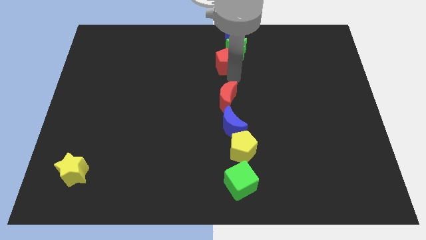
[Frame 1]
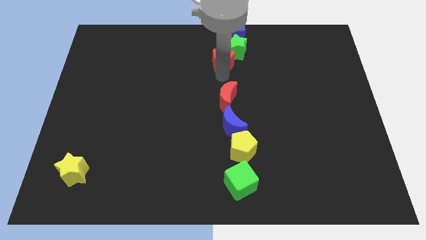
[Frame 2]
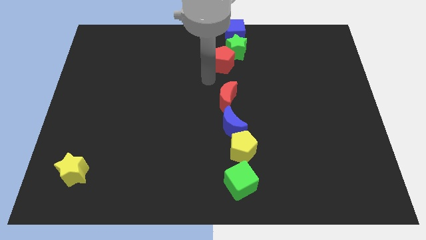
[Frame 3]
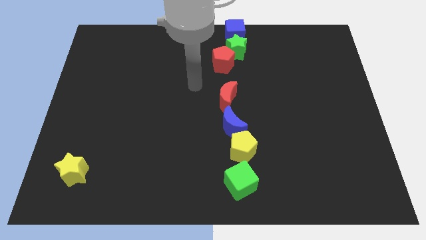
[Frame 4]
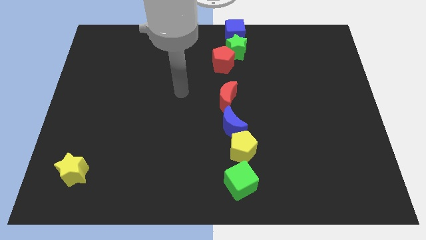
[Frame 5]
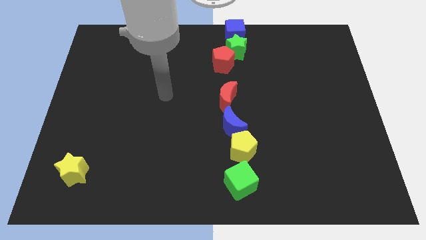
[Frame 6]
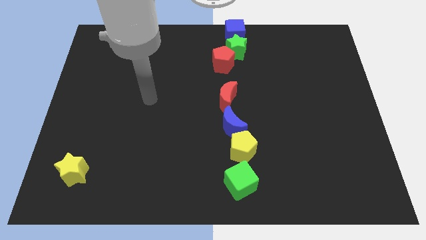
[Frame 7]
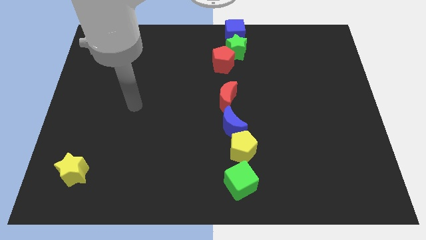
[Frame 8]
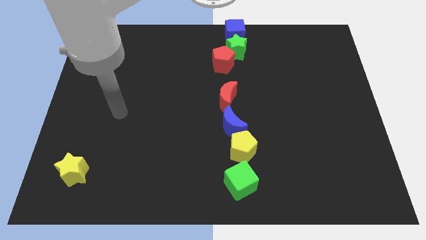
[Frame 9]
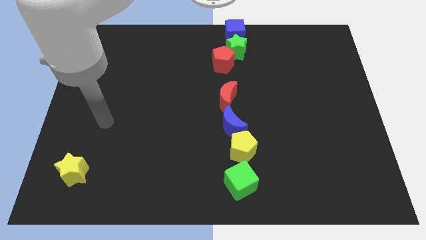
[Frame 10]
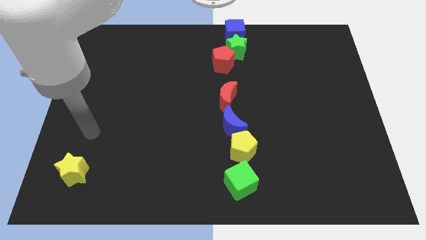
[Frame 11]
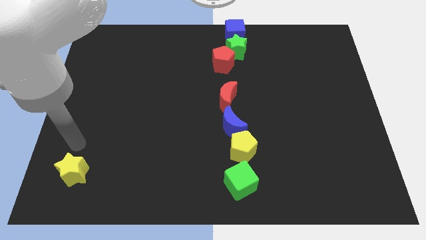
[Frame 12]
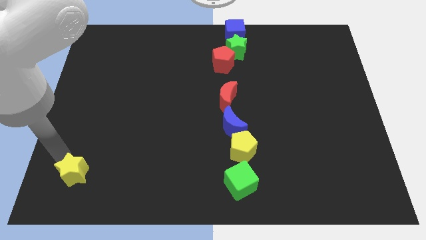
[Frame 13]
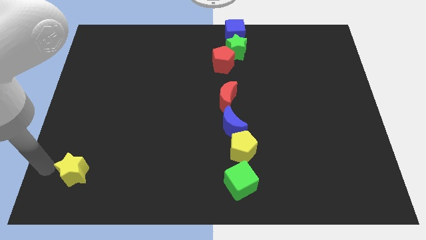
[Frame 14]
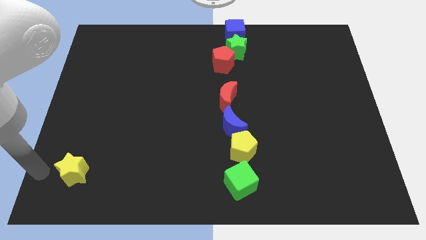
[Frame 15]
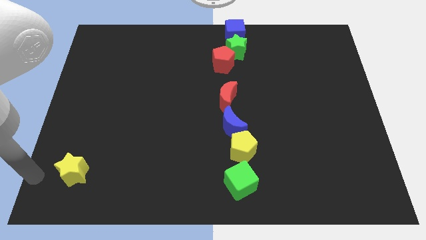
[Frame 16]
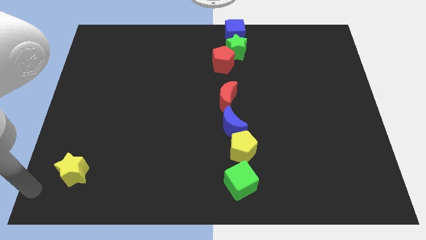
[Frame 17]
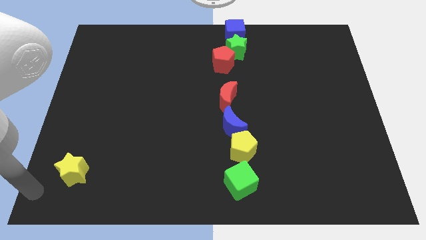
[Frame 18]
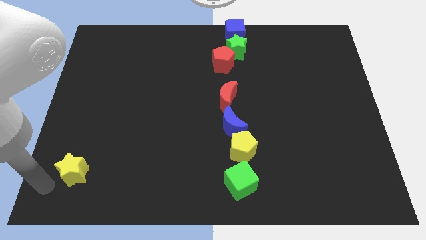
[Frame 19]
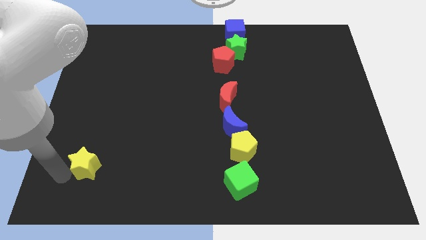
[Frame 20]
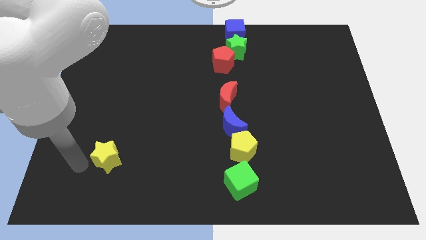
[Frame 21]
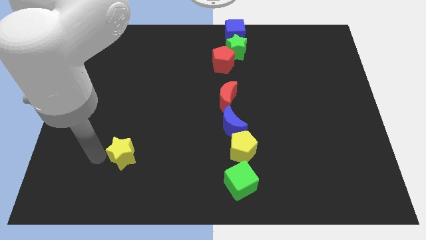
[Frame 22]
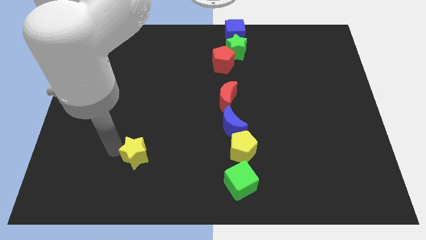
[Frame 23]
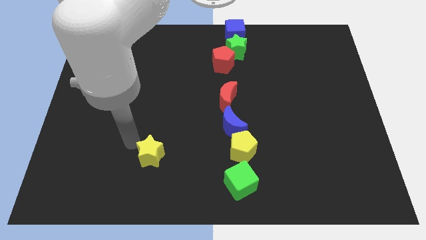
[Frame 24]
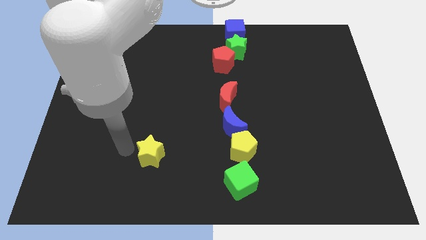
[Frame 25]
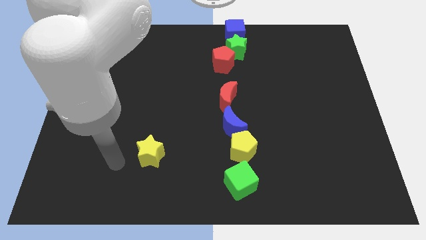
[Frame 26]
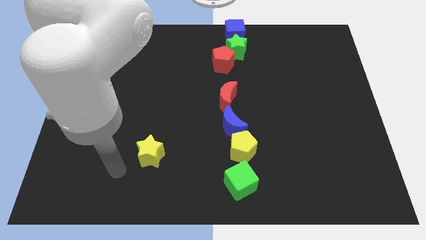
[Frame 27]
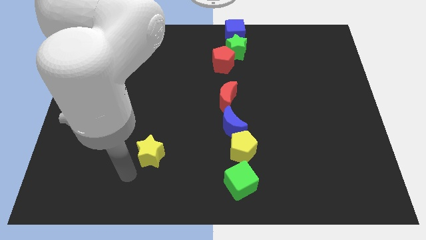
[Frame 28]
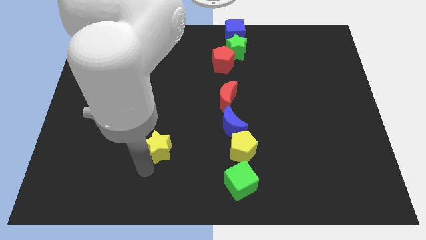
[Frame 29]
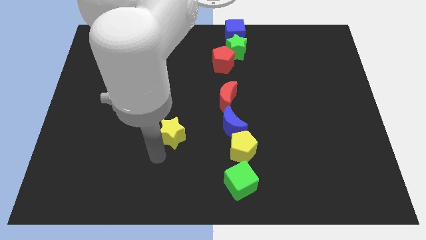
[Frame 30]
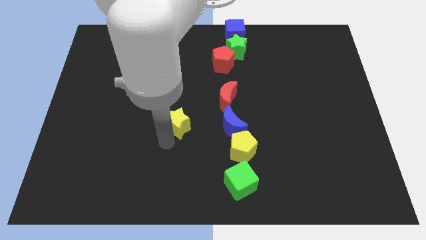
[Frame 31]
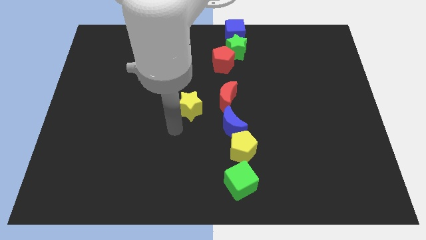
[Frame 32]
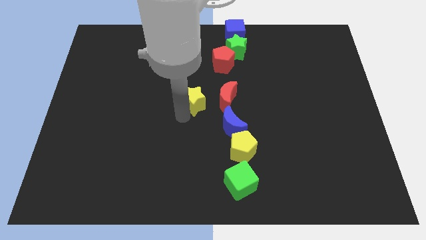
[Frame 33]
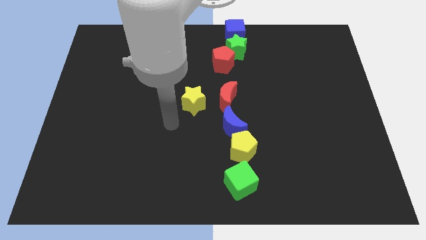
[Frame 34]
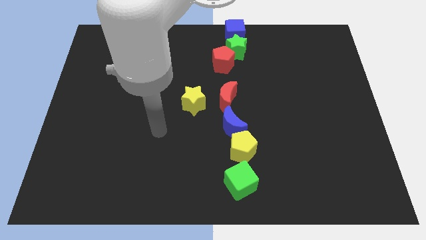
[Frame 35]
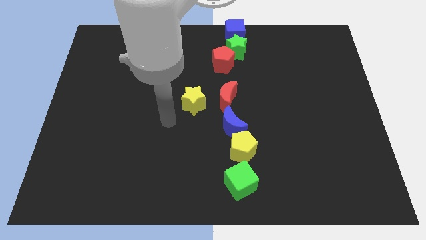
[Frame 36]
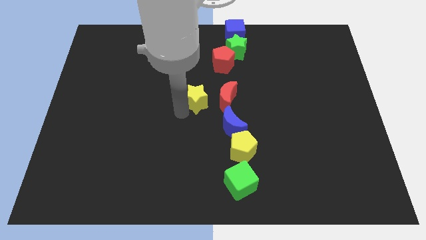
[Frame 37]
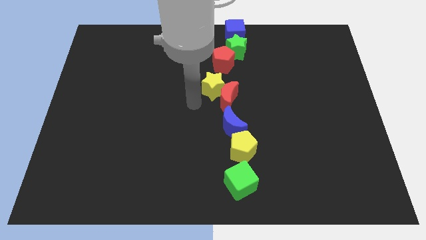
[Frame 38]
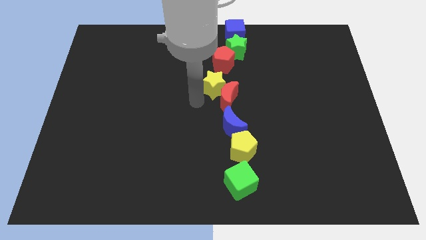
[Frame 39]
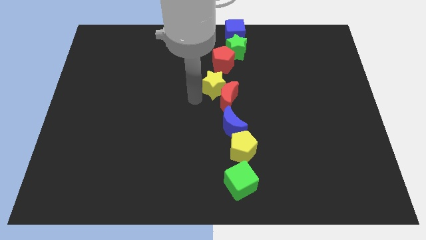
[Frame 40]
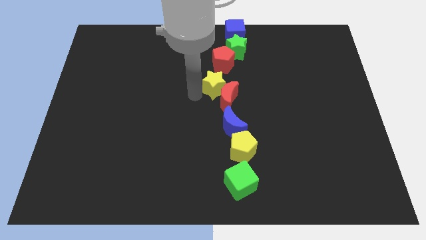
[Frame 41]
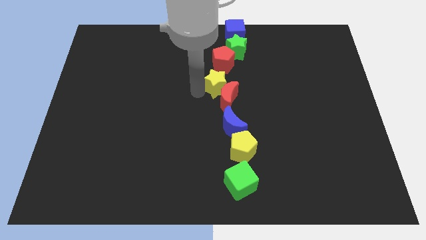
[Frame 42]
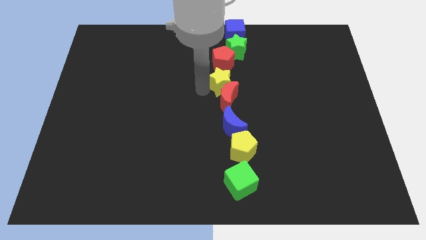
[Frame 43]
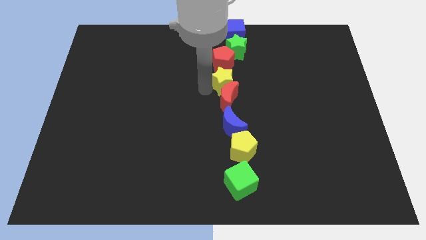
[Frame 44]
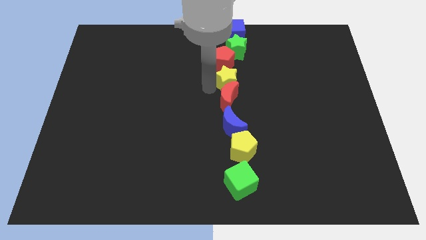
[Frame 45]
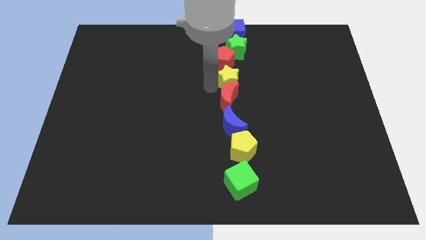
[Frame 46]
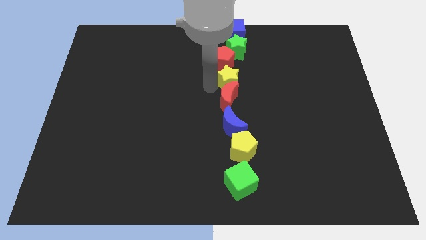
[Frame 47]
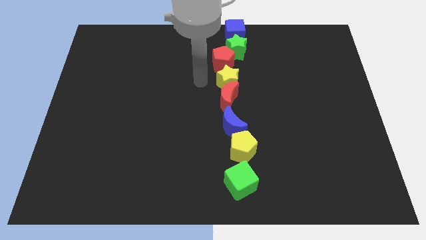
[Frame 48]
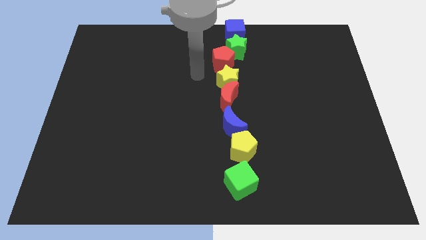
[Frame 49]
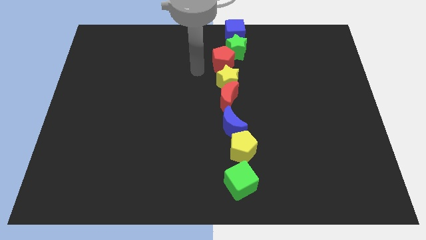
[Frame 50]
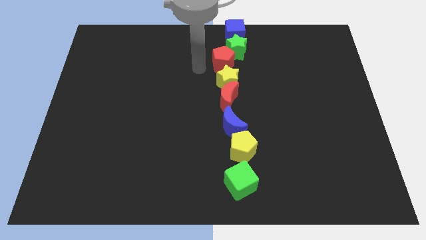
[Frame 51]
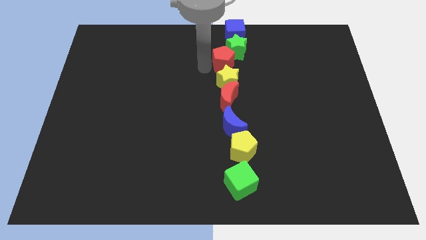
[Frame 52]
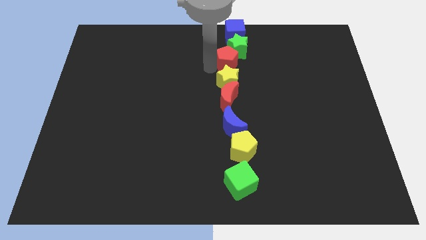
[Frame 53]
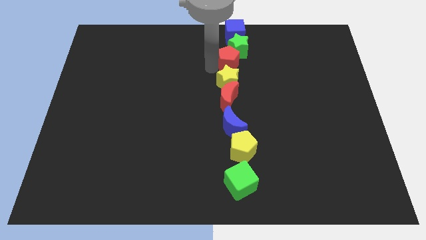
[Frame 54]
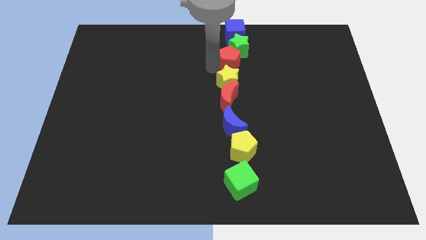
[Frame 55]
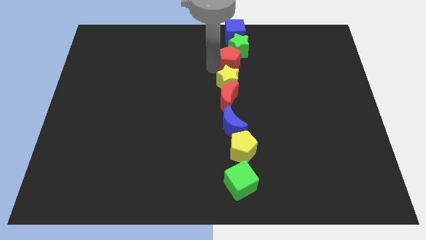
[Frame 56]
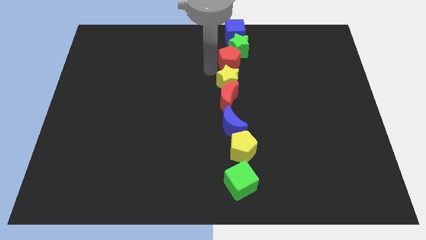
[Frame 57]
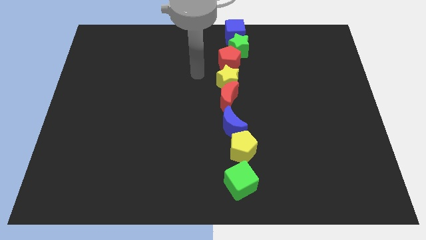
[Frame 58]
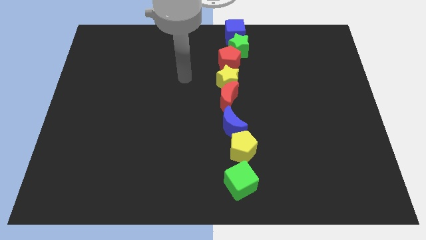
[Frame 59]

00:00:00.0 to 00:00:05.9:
slide the yellow star in between the red pentagon and red crescent

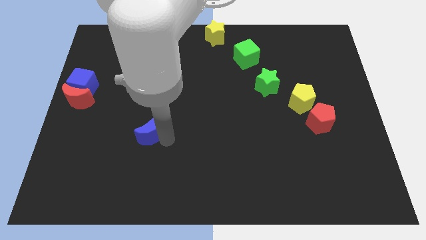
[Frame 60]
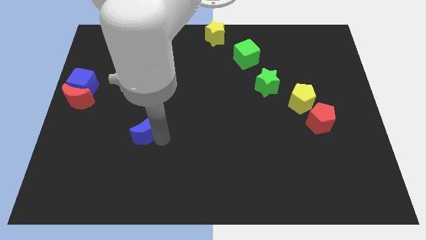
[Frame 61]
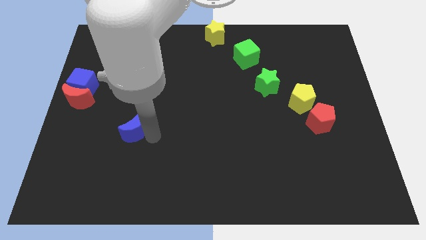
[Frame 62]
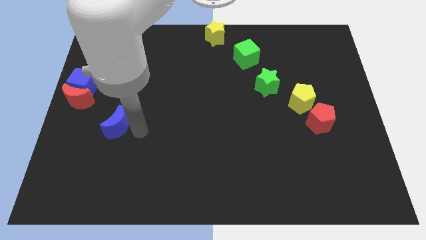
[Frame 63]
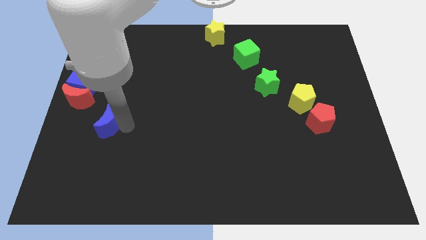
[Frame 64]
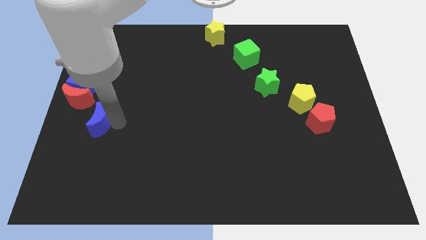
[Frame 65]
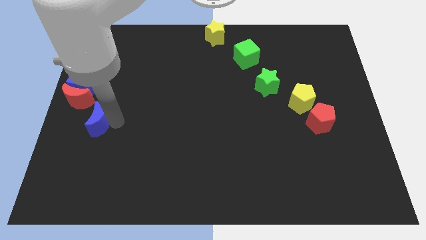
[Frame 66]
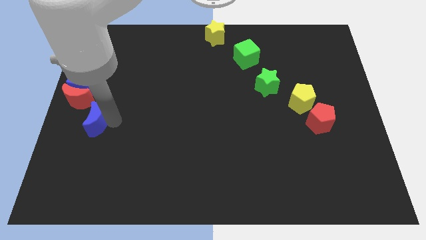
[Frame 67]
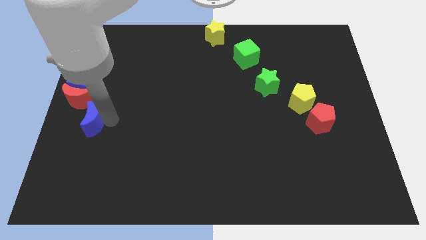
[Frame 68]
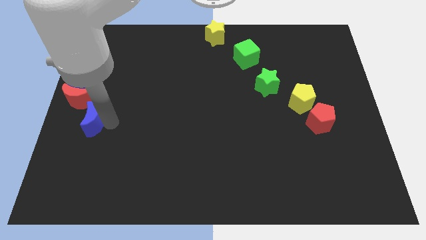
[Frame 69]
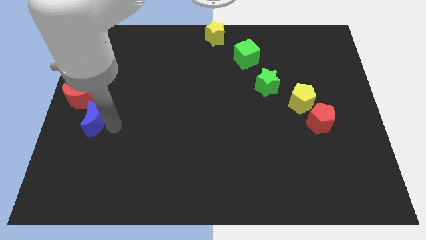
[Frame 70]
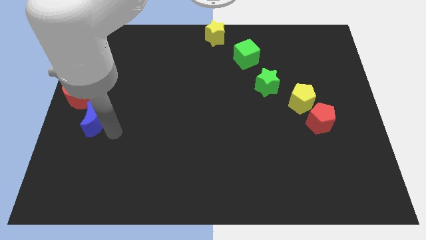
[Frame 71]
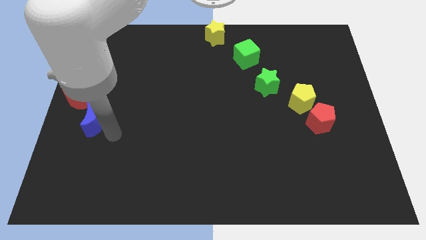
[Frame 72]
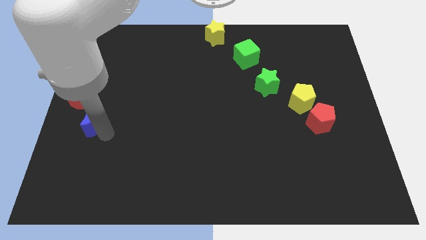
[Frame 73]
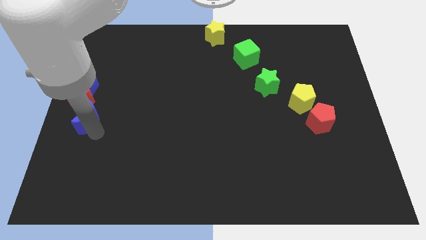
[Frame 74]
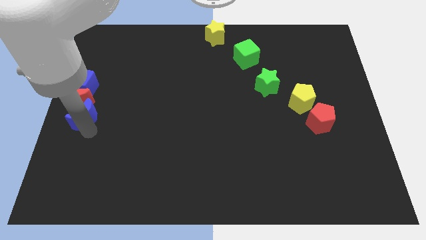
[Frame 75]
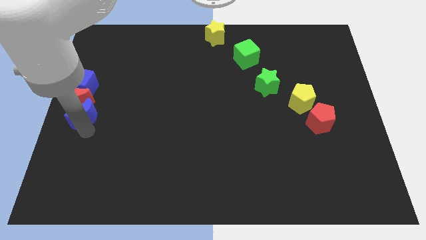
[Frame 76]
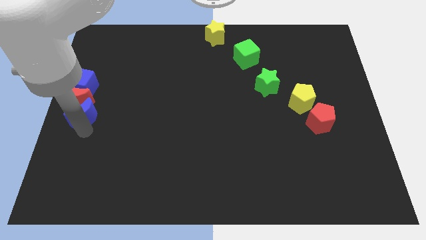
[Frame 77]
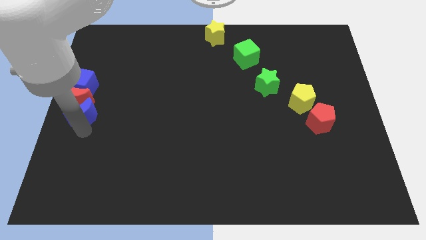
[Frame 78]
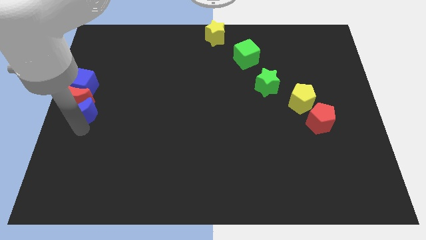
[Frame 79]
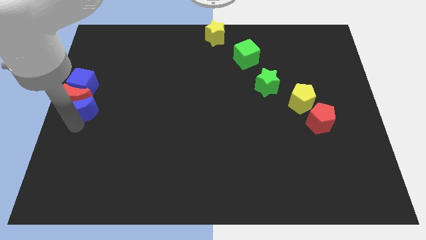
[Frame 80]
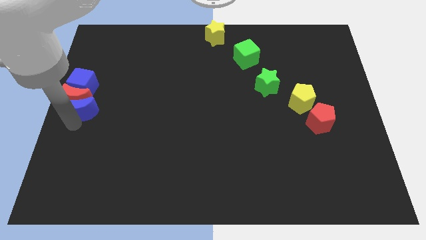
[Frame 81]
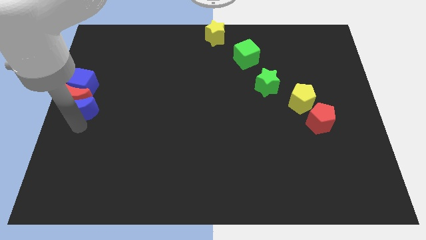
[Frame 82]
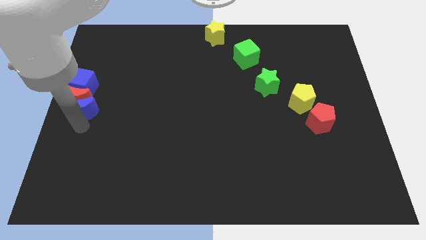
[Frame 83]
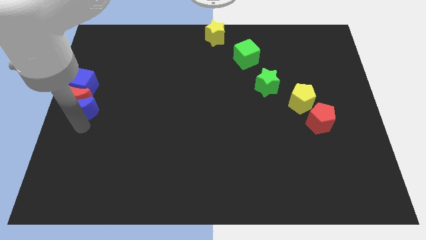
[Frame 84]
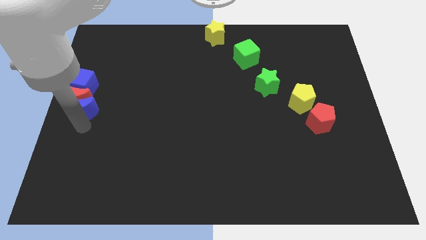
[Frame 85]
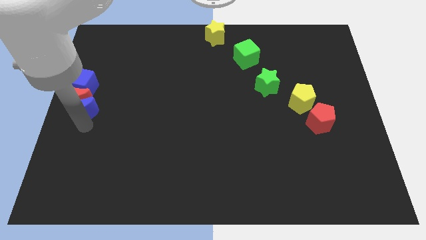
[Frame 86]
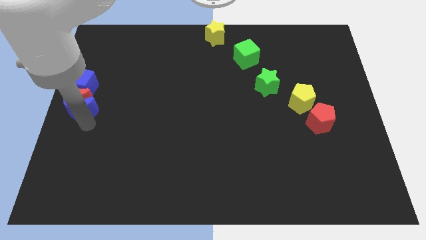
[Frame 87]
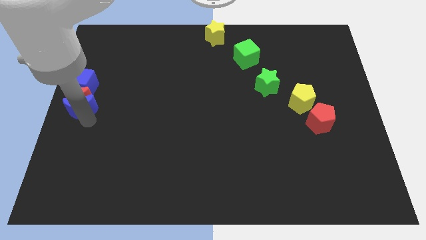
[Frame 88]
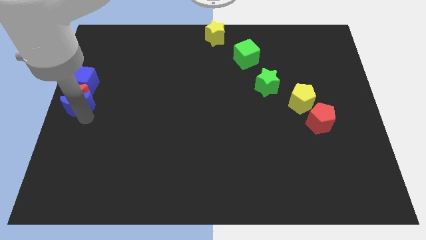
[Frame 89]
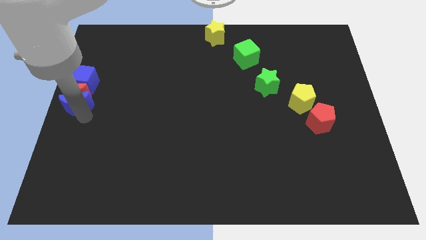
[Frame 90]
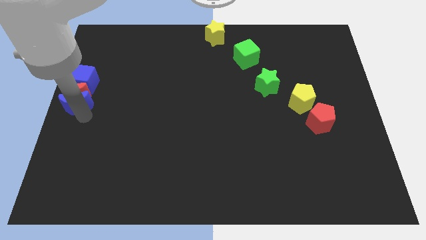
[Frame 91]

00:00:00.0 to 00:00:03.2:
put the blue moon vertically below the red moon
